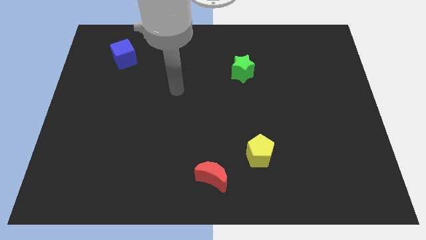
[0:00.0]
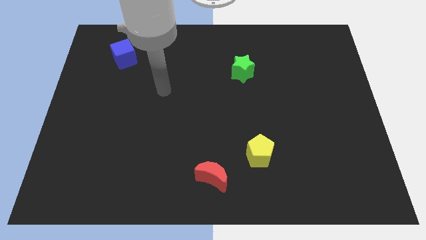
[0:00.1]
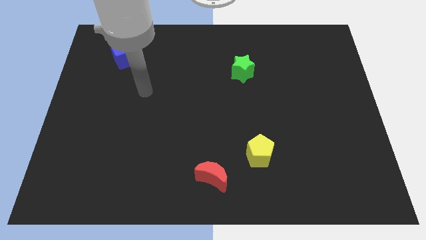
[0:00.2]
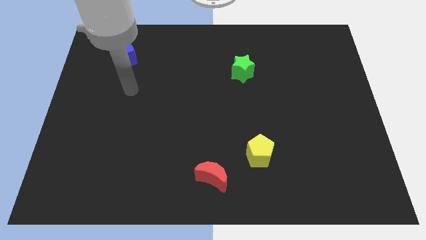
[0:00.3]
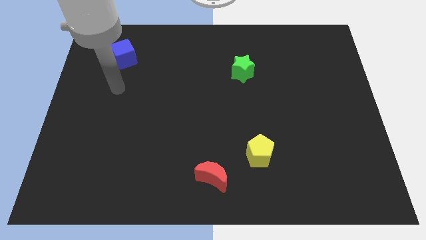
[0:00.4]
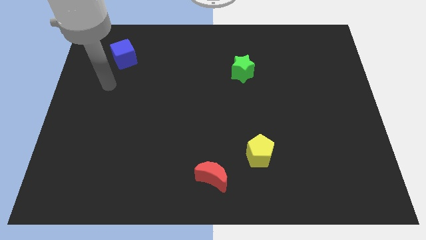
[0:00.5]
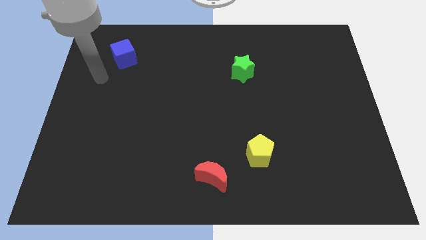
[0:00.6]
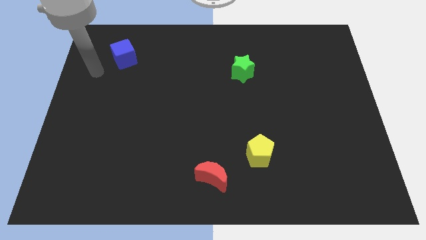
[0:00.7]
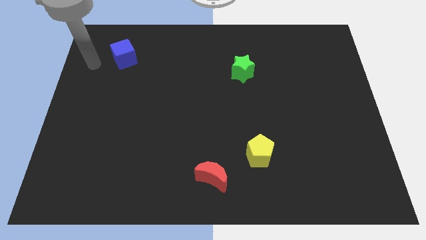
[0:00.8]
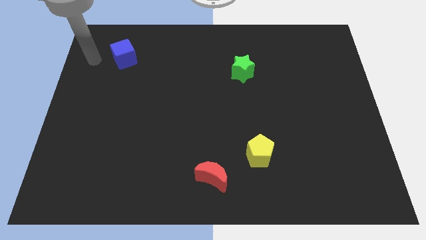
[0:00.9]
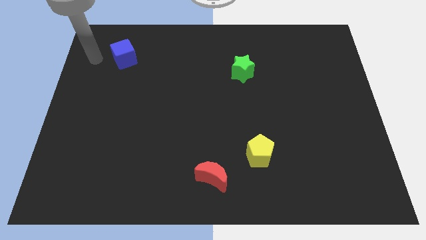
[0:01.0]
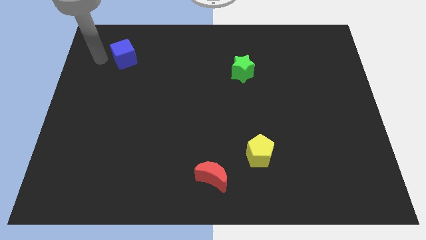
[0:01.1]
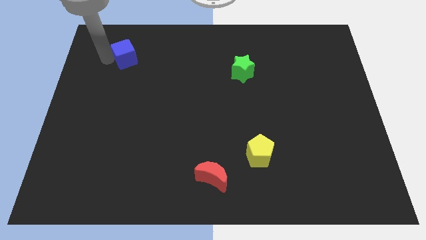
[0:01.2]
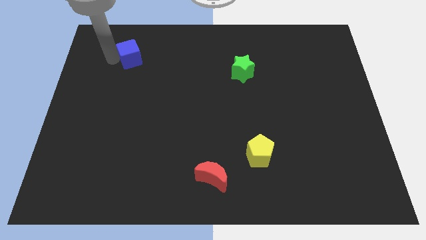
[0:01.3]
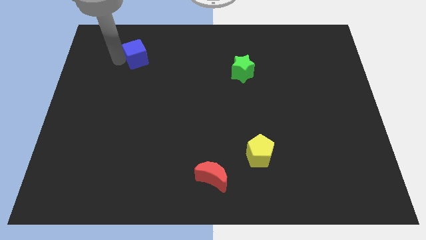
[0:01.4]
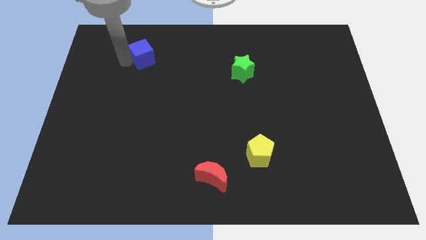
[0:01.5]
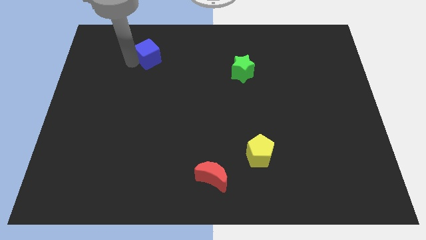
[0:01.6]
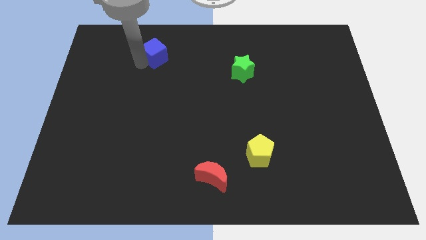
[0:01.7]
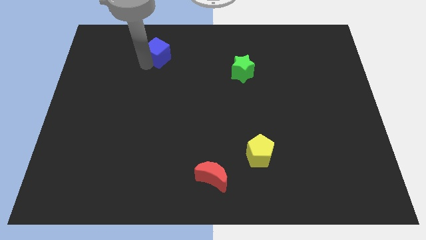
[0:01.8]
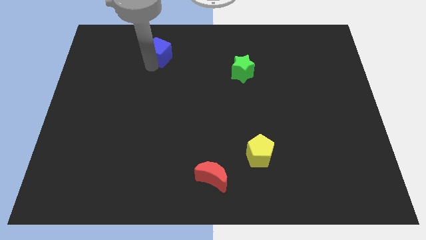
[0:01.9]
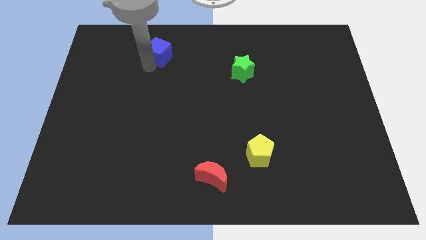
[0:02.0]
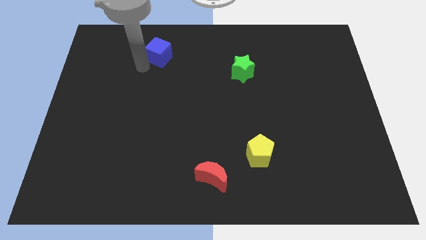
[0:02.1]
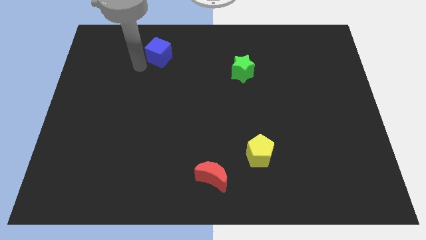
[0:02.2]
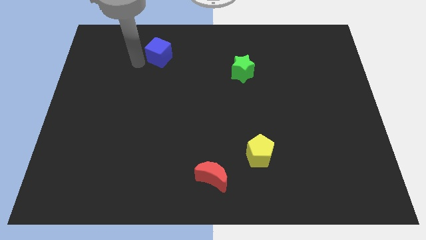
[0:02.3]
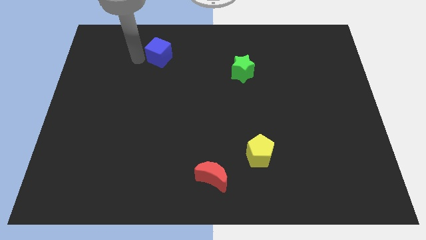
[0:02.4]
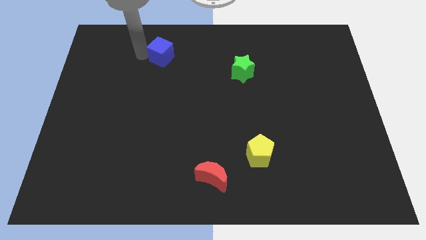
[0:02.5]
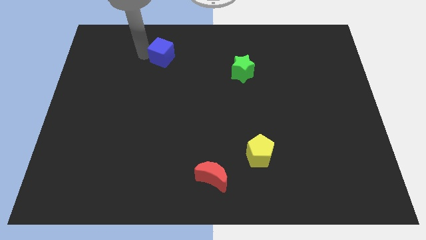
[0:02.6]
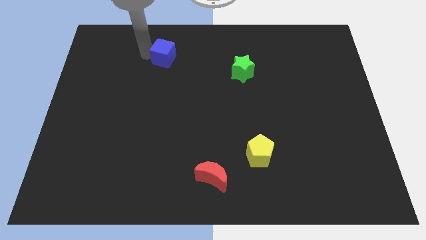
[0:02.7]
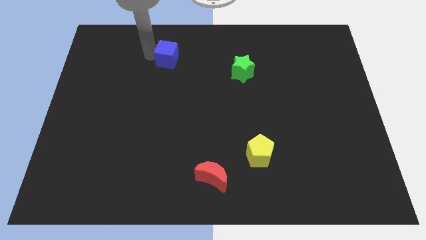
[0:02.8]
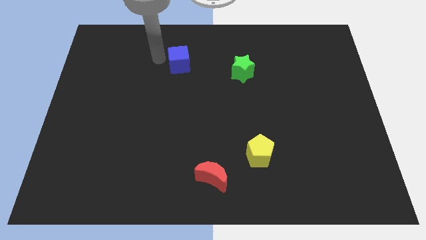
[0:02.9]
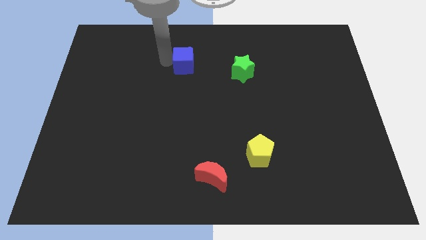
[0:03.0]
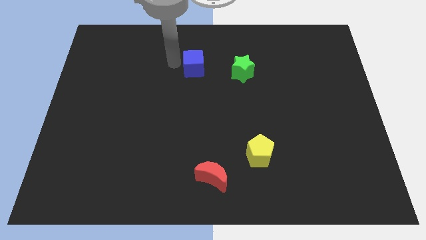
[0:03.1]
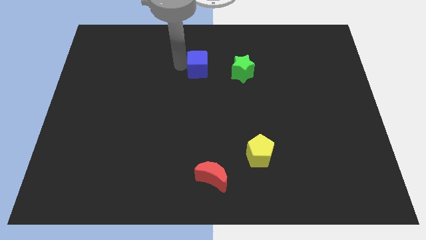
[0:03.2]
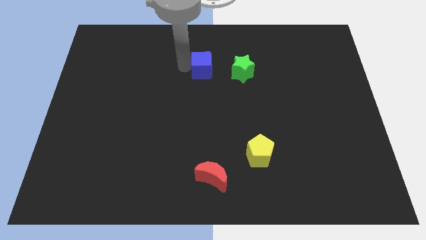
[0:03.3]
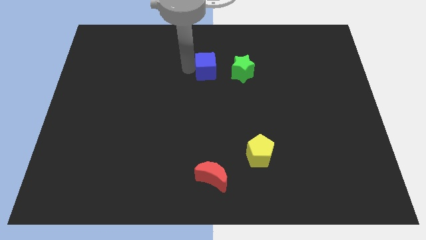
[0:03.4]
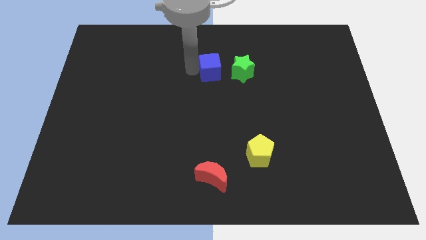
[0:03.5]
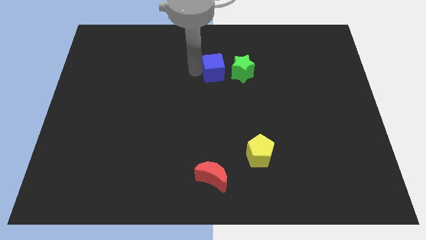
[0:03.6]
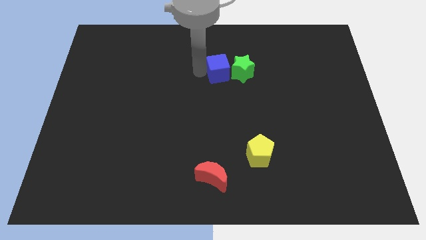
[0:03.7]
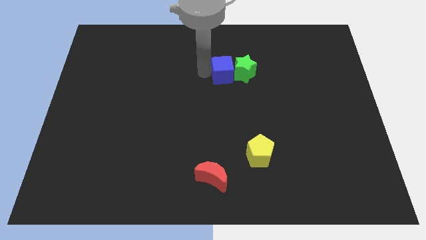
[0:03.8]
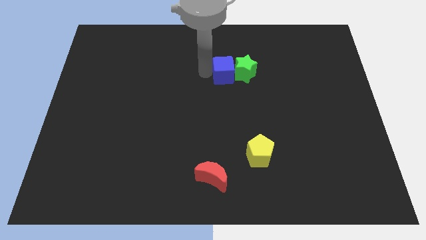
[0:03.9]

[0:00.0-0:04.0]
put the blue block towards the green star

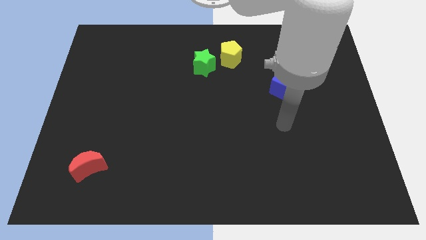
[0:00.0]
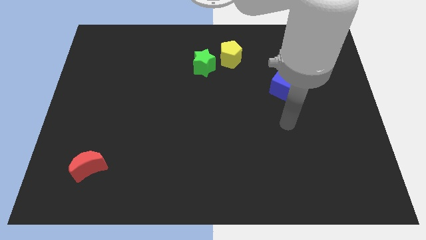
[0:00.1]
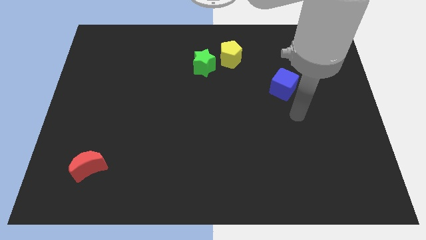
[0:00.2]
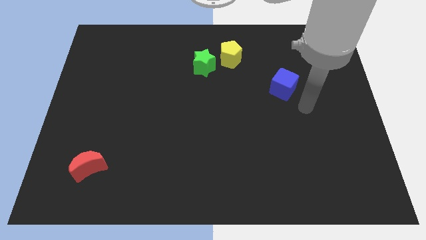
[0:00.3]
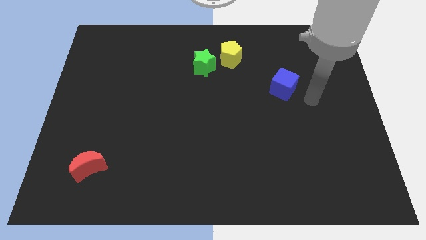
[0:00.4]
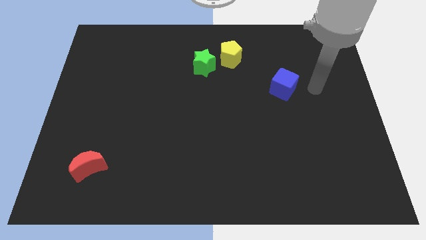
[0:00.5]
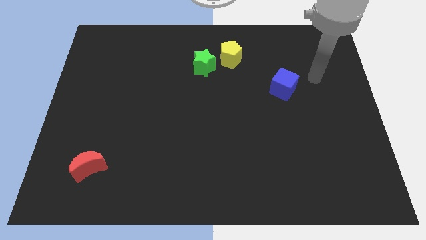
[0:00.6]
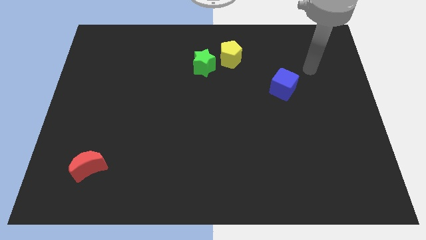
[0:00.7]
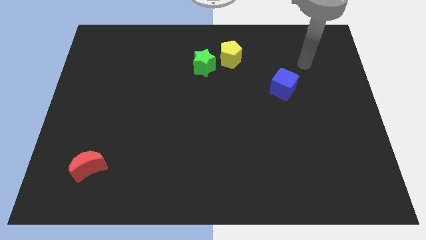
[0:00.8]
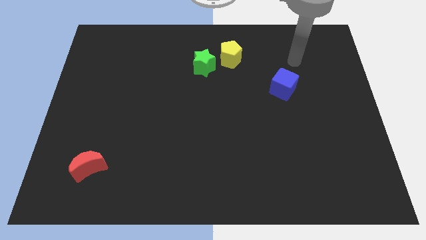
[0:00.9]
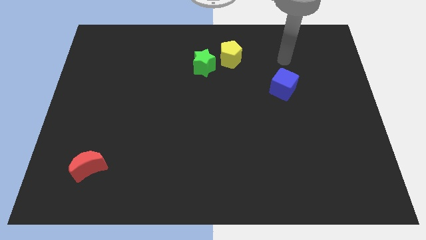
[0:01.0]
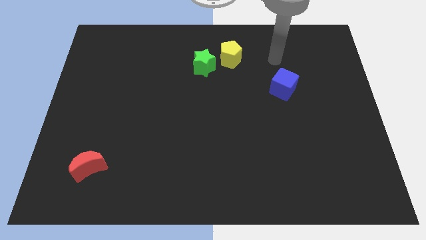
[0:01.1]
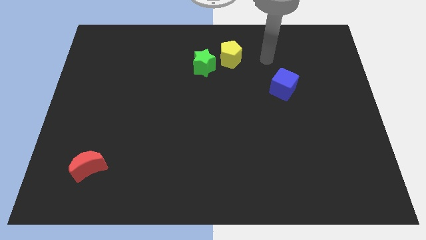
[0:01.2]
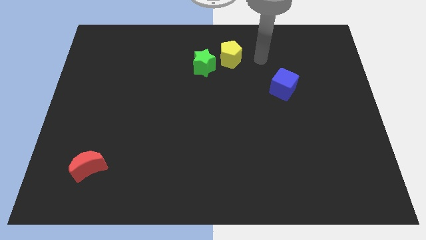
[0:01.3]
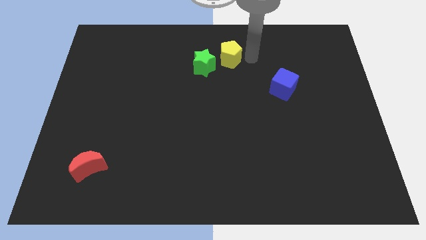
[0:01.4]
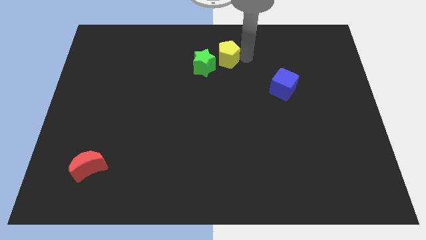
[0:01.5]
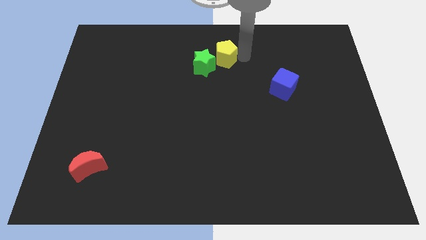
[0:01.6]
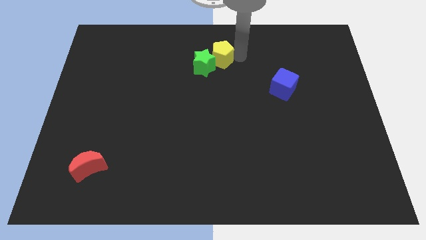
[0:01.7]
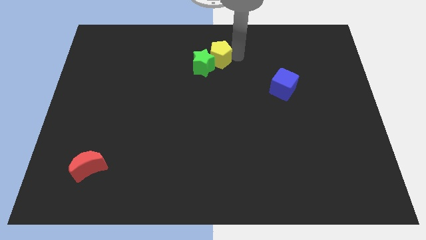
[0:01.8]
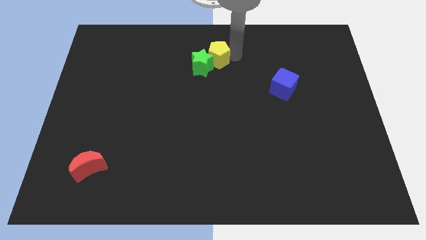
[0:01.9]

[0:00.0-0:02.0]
push the yellow block next to the star

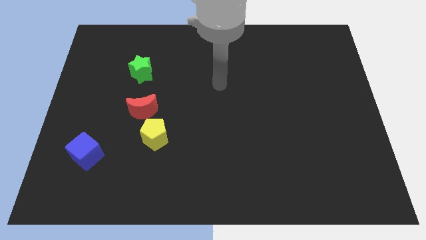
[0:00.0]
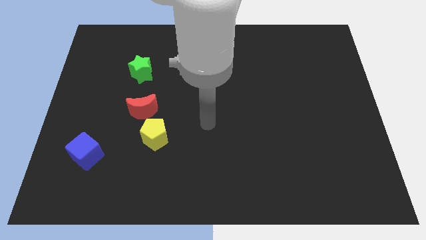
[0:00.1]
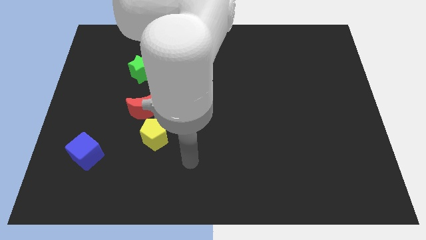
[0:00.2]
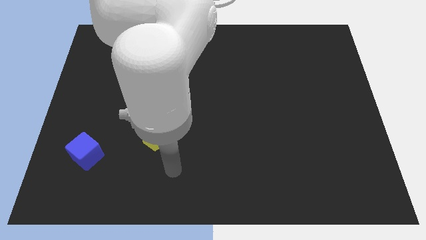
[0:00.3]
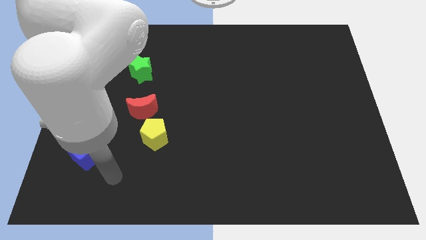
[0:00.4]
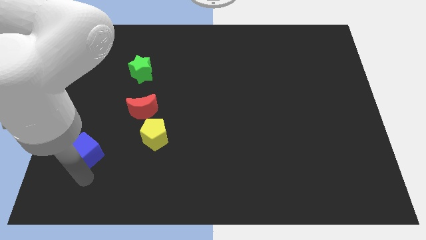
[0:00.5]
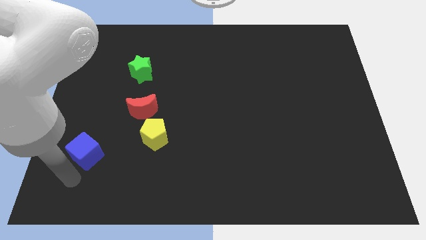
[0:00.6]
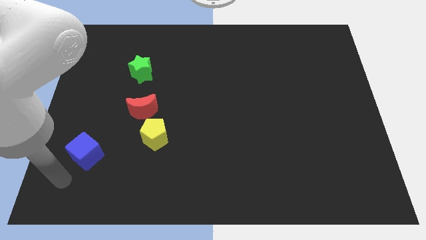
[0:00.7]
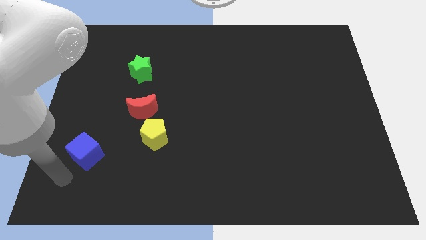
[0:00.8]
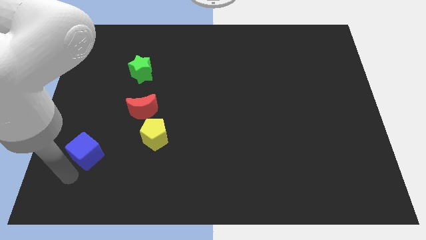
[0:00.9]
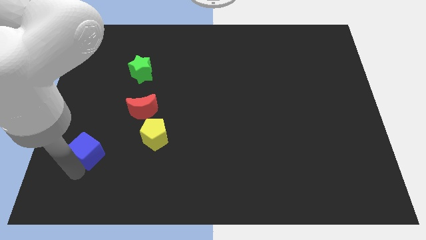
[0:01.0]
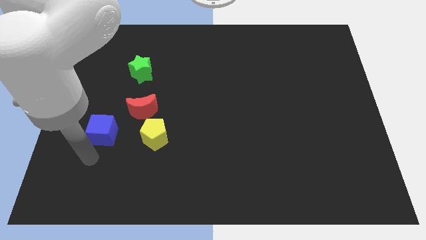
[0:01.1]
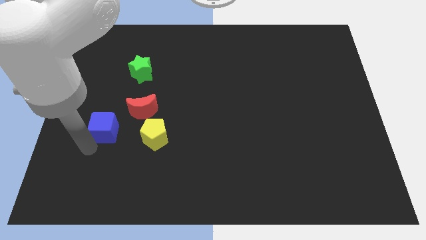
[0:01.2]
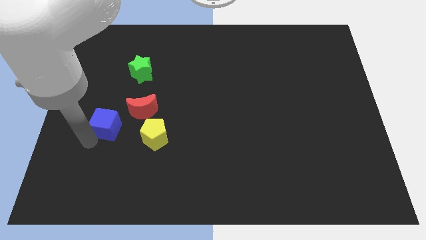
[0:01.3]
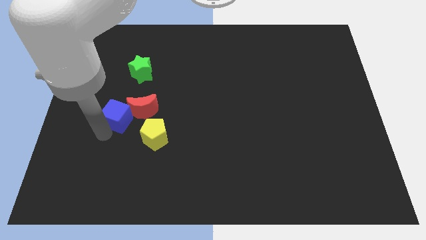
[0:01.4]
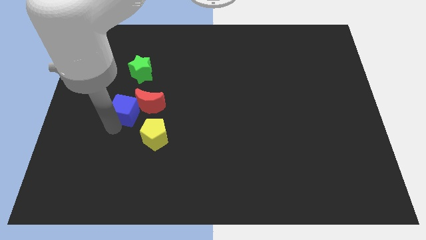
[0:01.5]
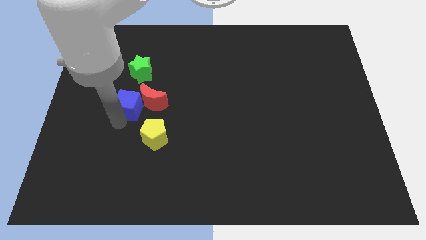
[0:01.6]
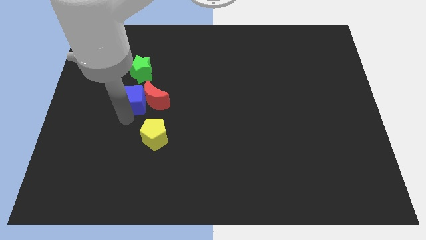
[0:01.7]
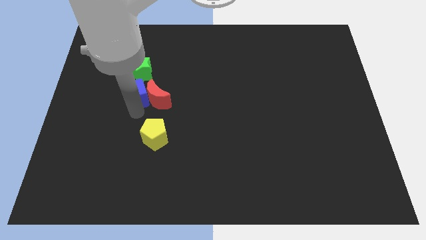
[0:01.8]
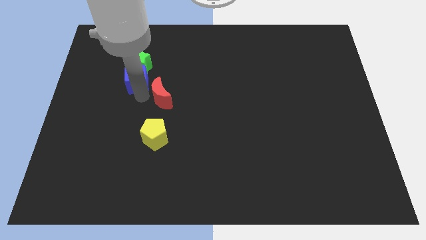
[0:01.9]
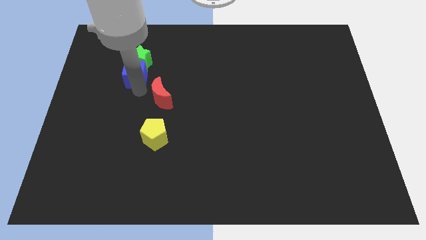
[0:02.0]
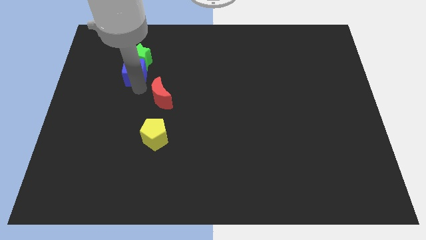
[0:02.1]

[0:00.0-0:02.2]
push the blue cube close to the star

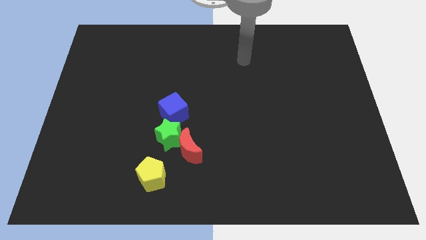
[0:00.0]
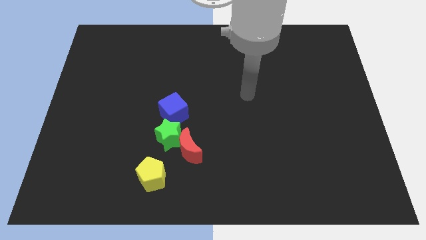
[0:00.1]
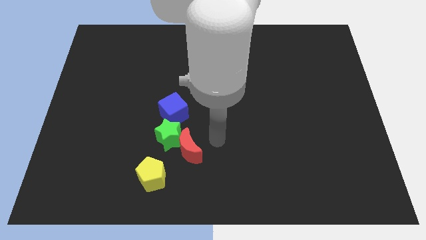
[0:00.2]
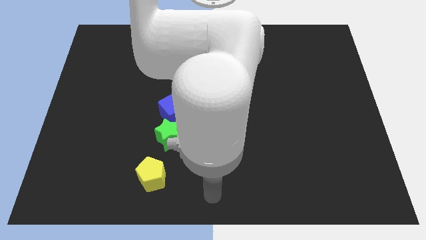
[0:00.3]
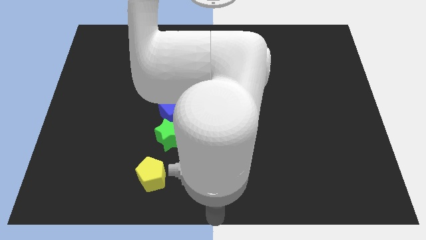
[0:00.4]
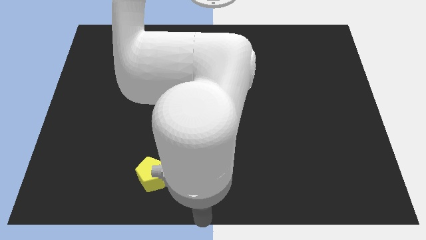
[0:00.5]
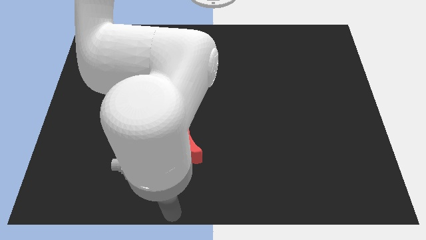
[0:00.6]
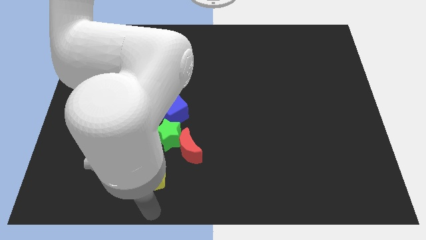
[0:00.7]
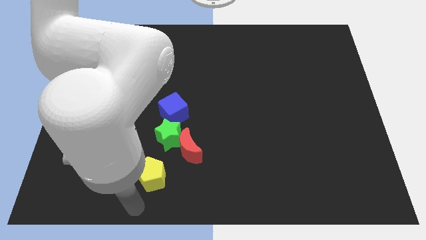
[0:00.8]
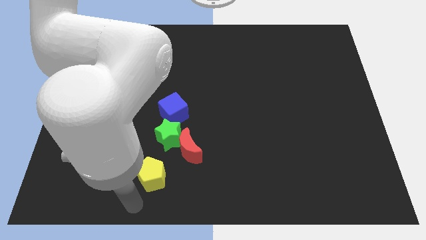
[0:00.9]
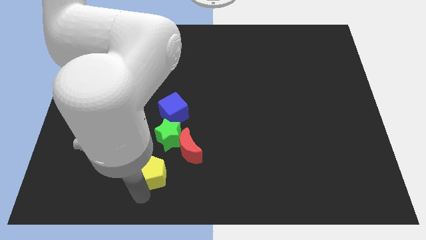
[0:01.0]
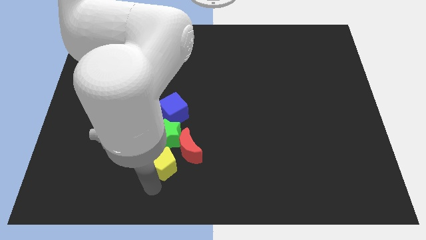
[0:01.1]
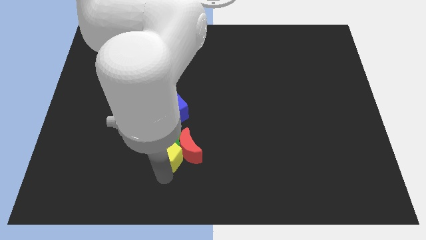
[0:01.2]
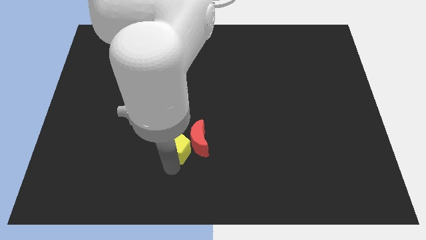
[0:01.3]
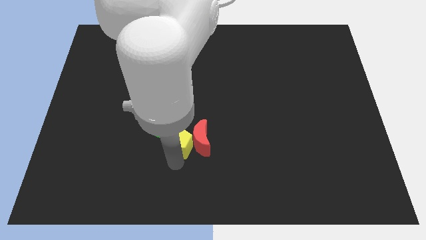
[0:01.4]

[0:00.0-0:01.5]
slide the yellow pentagon close to the moon
